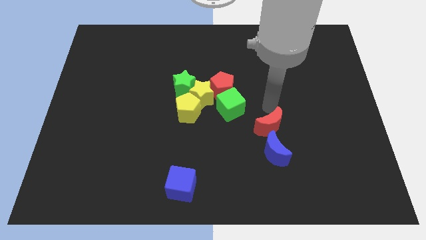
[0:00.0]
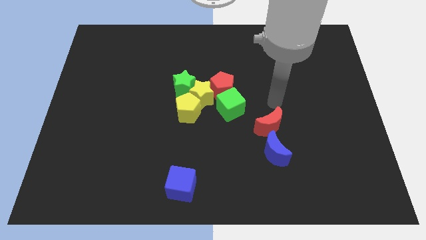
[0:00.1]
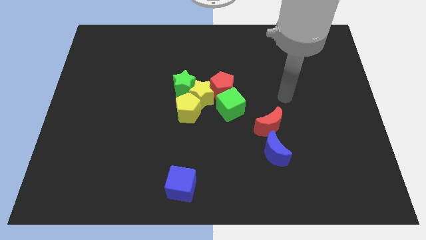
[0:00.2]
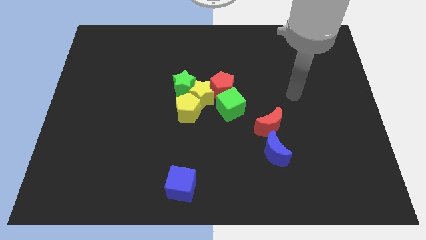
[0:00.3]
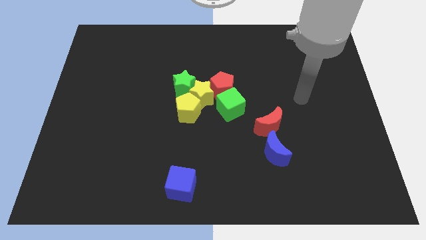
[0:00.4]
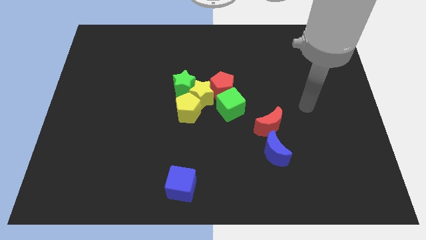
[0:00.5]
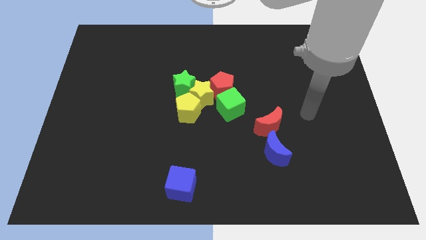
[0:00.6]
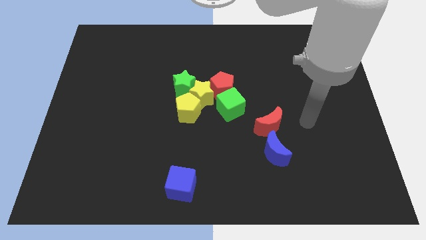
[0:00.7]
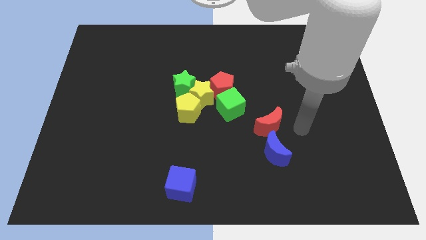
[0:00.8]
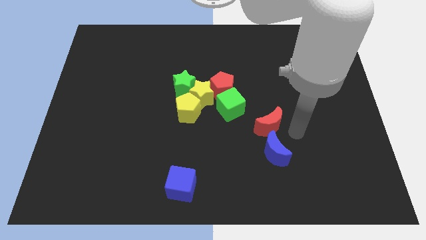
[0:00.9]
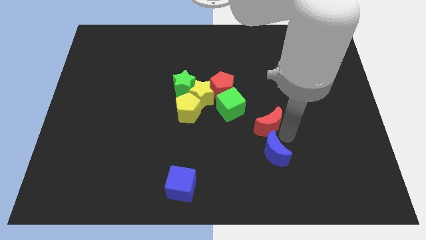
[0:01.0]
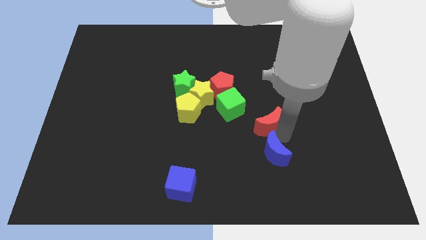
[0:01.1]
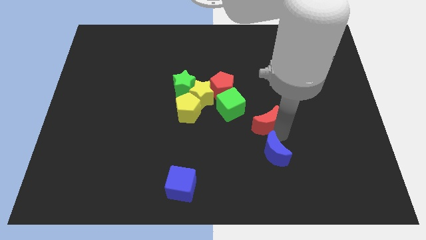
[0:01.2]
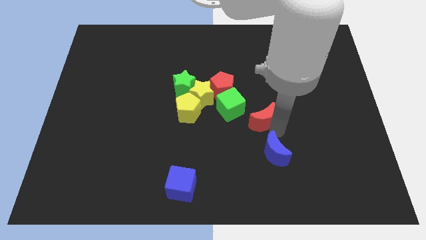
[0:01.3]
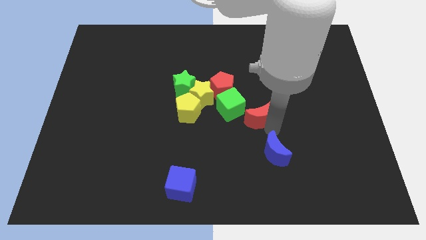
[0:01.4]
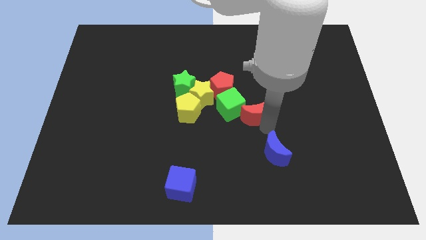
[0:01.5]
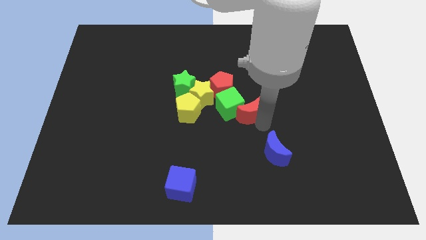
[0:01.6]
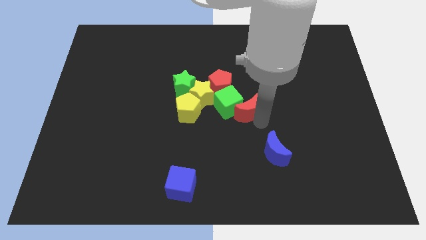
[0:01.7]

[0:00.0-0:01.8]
attach the red moon to the green cube

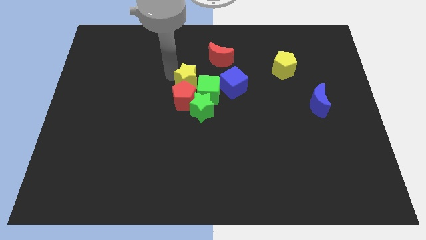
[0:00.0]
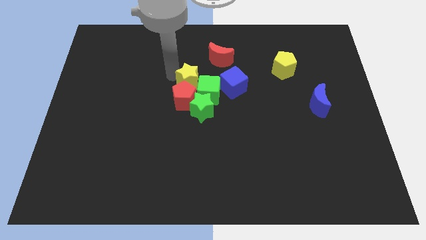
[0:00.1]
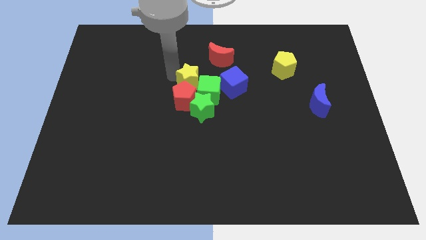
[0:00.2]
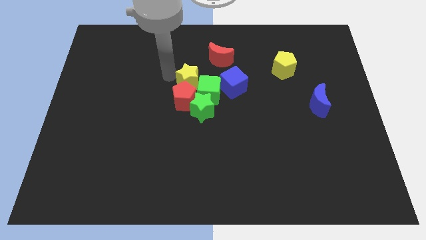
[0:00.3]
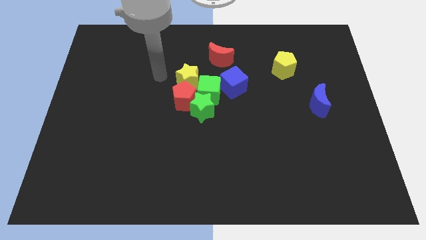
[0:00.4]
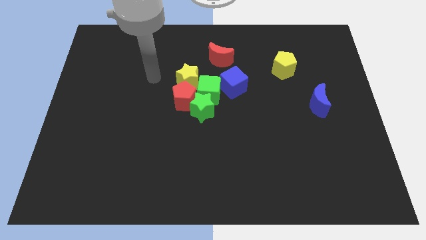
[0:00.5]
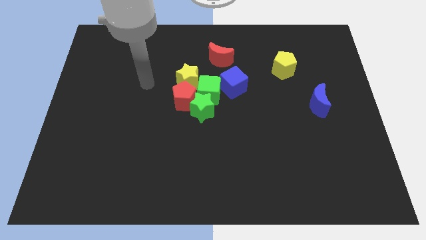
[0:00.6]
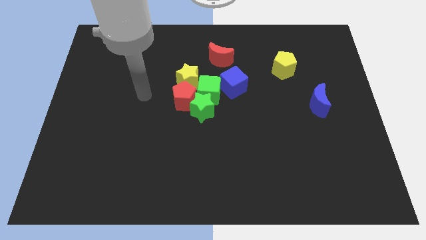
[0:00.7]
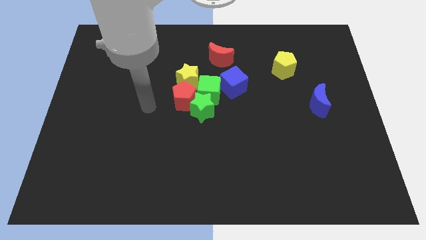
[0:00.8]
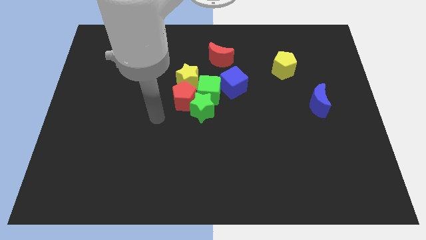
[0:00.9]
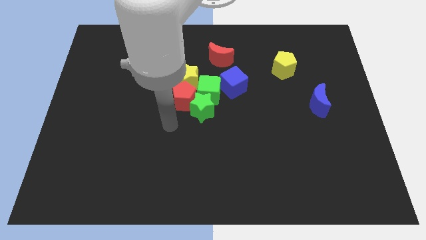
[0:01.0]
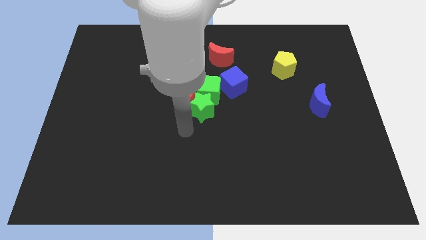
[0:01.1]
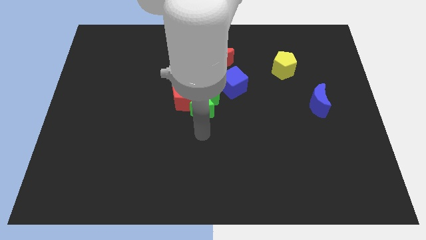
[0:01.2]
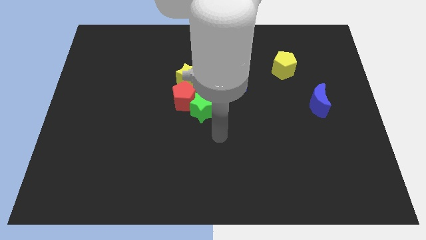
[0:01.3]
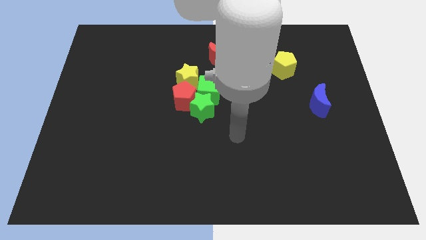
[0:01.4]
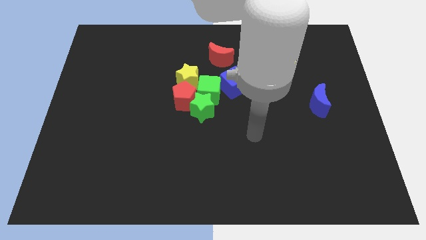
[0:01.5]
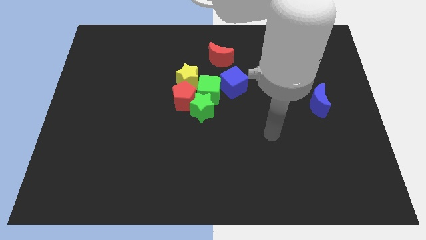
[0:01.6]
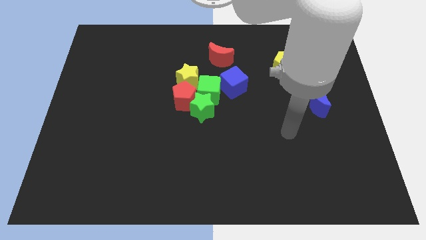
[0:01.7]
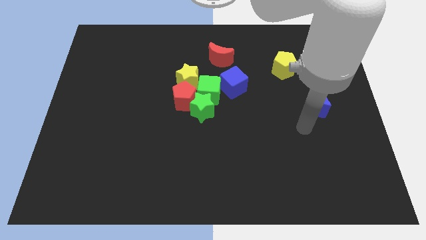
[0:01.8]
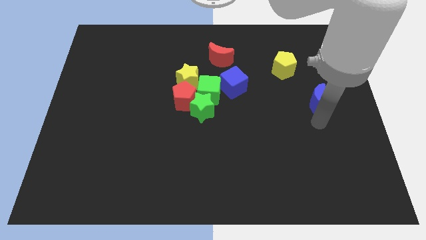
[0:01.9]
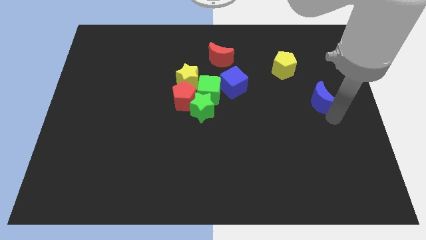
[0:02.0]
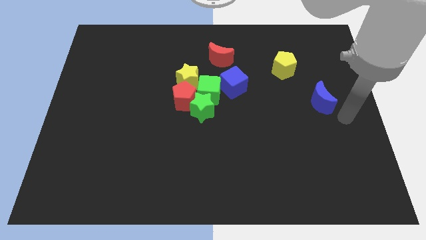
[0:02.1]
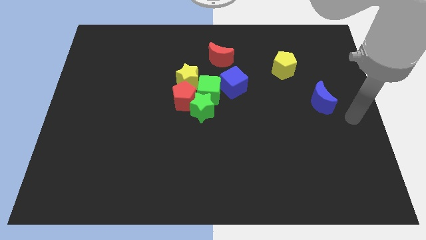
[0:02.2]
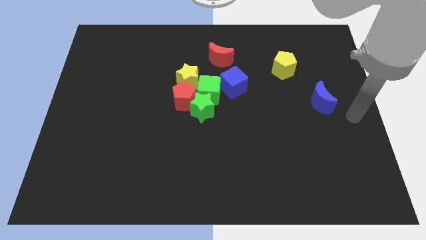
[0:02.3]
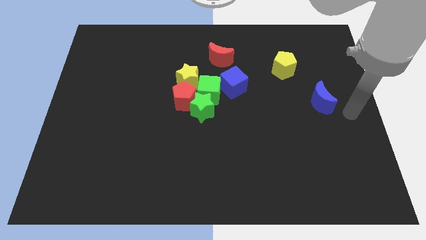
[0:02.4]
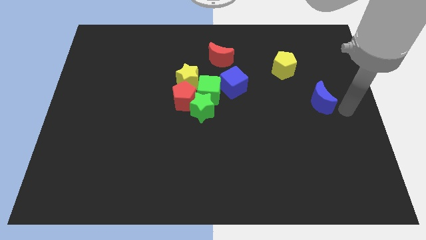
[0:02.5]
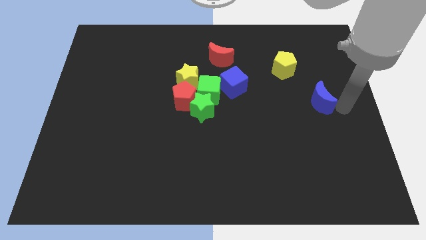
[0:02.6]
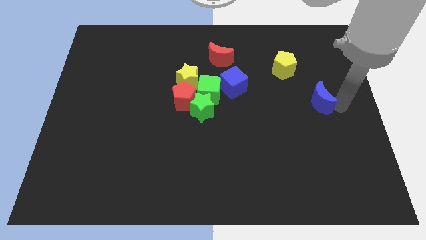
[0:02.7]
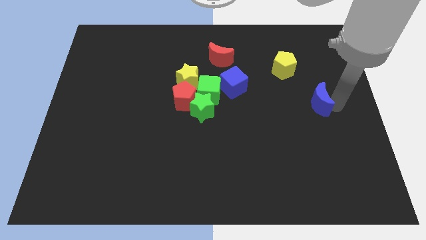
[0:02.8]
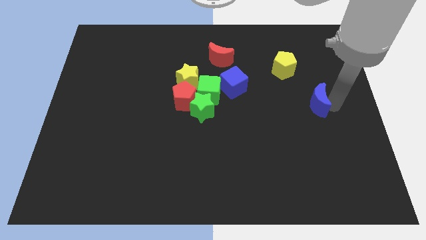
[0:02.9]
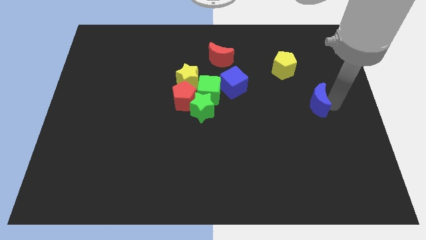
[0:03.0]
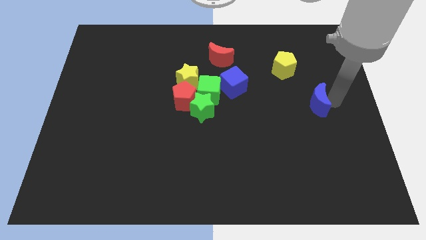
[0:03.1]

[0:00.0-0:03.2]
slide the blue moon diagonally to the yellow pentagon

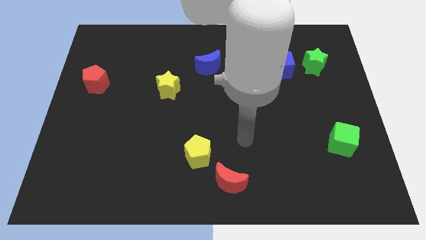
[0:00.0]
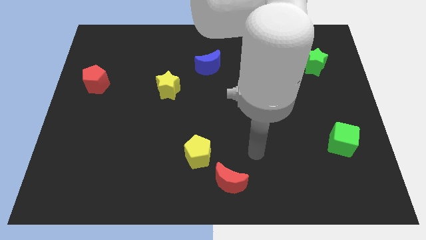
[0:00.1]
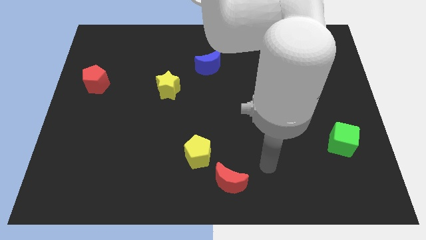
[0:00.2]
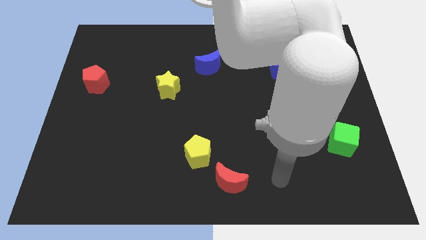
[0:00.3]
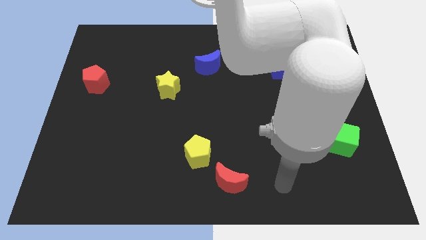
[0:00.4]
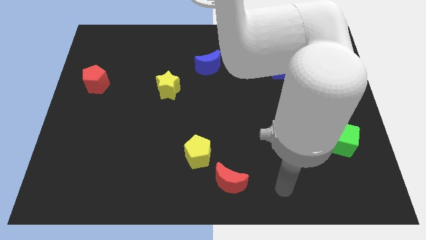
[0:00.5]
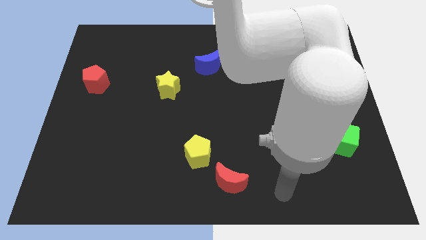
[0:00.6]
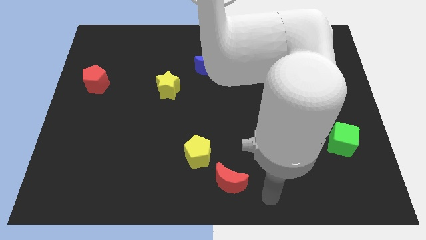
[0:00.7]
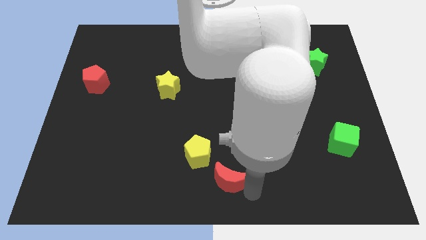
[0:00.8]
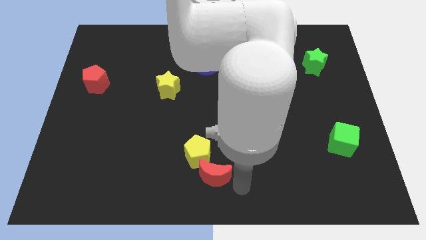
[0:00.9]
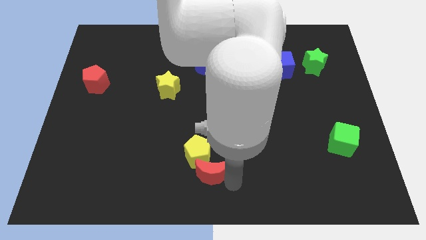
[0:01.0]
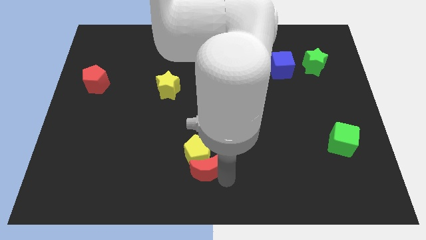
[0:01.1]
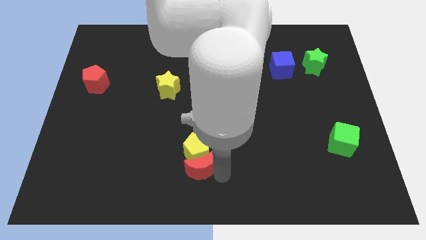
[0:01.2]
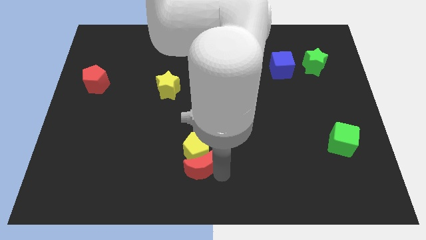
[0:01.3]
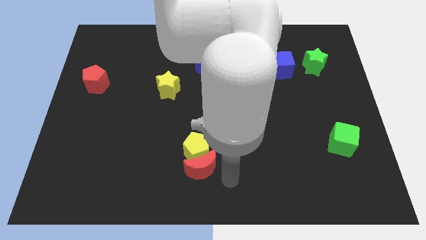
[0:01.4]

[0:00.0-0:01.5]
push red moon into yellow pentagon

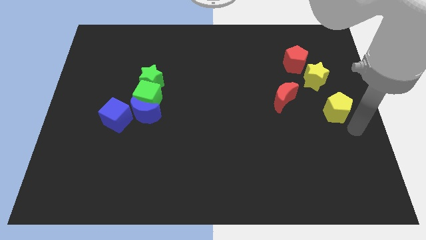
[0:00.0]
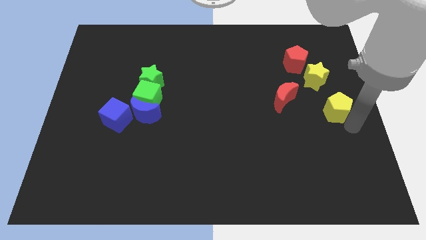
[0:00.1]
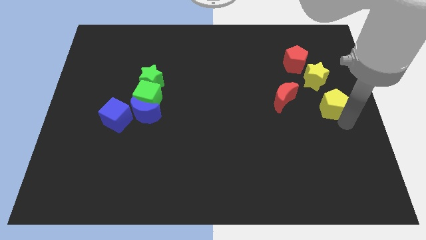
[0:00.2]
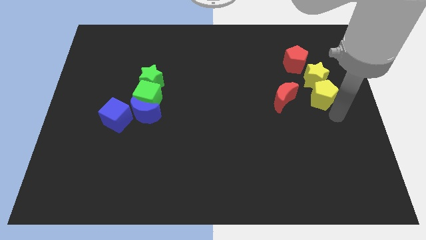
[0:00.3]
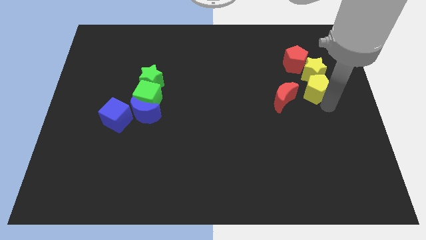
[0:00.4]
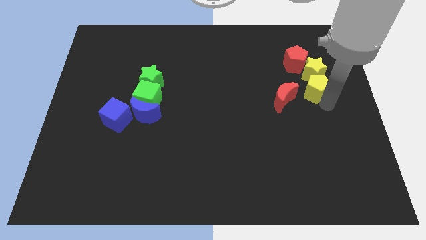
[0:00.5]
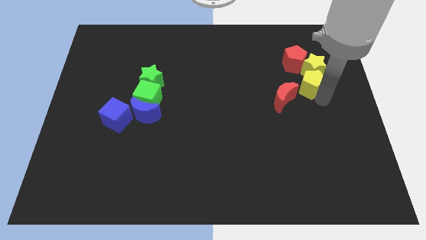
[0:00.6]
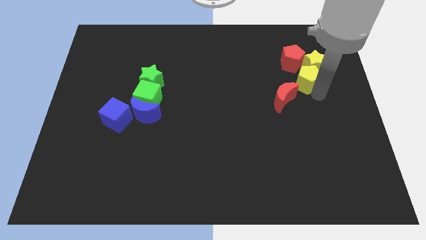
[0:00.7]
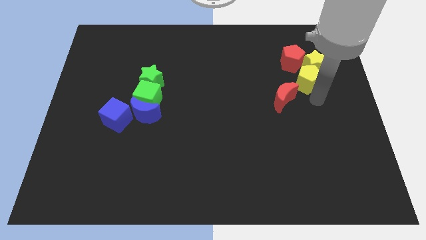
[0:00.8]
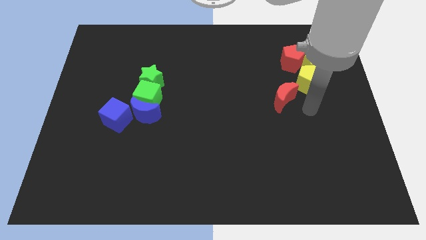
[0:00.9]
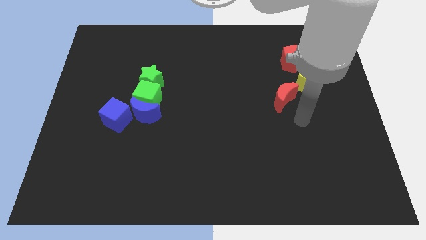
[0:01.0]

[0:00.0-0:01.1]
place the yellow pentagon below the yellow star

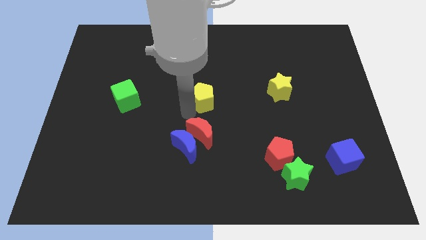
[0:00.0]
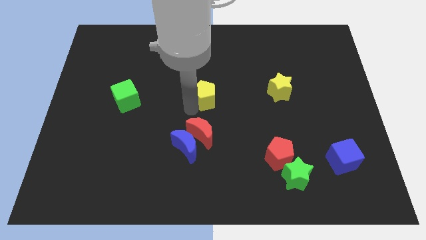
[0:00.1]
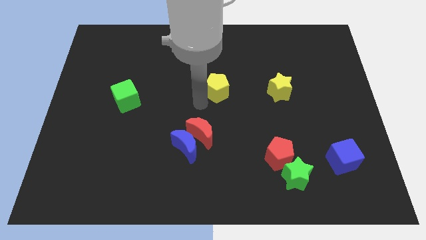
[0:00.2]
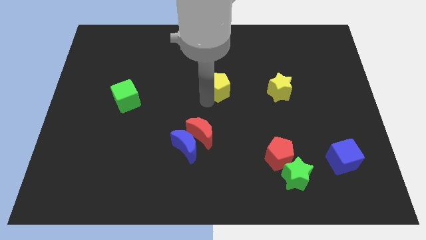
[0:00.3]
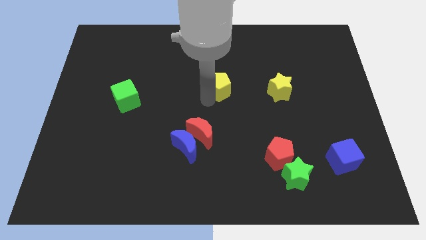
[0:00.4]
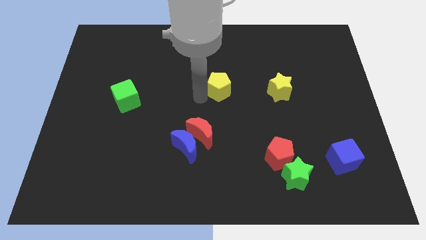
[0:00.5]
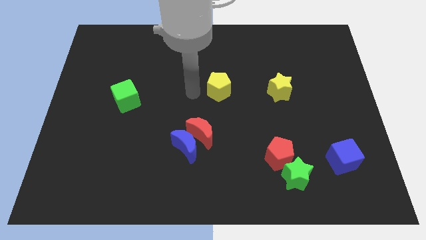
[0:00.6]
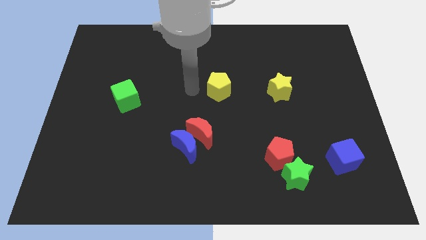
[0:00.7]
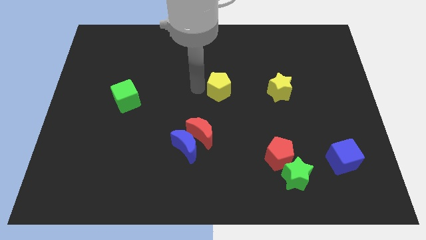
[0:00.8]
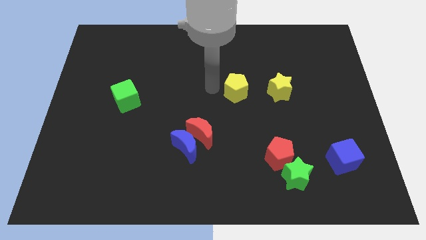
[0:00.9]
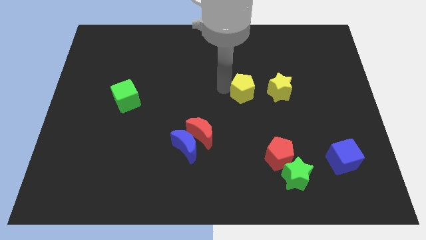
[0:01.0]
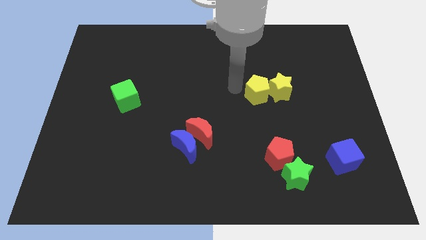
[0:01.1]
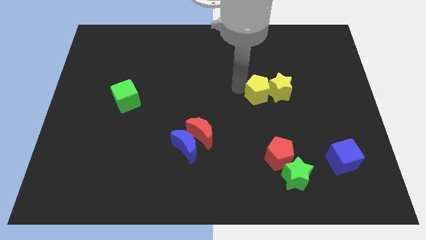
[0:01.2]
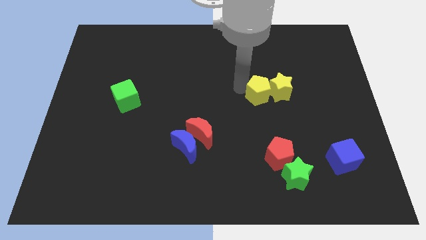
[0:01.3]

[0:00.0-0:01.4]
move the yellow pentagon into the yellow star

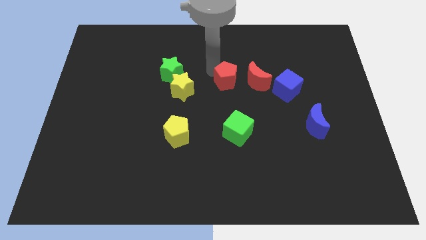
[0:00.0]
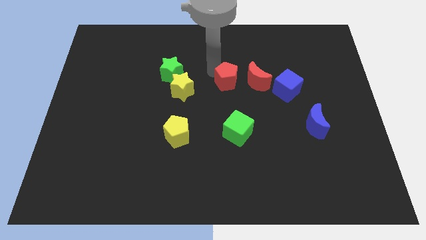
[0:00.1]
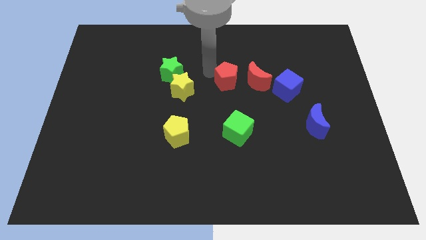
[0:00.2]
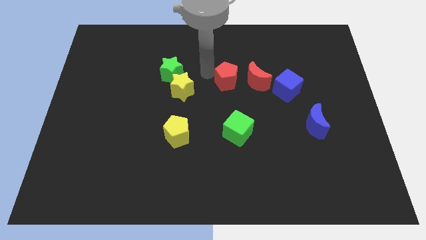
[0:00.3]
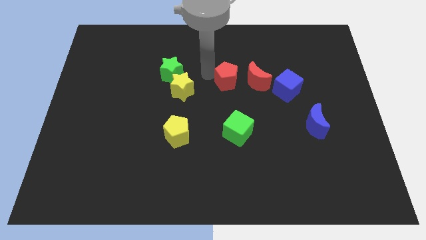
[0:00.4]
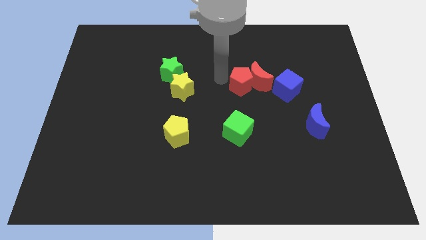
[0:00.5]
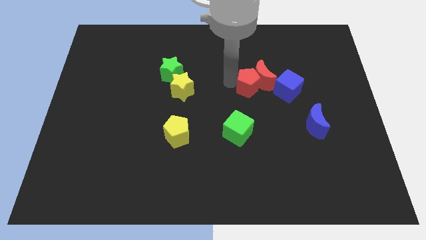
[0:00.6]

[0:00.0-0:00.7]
push the red pentagon into the red crescent
